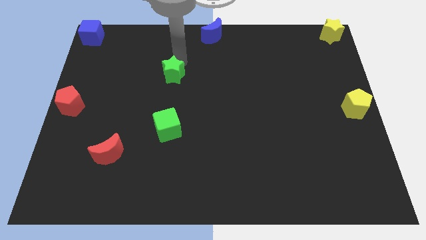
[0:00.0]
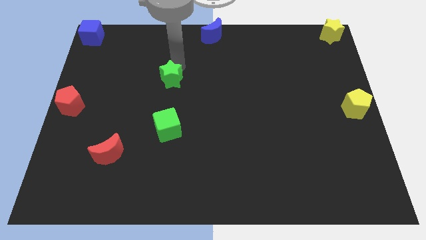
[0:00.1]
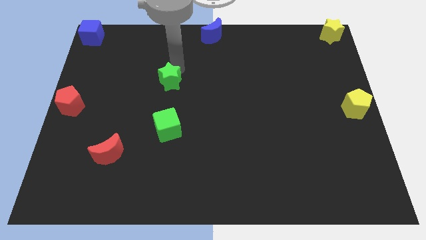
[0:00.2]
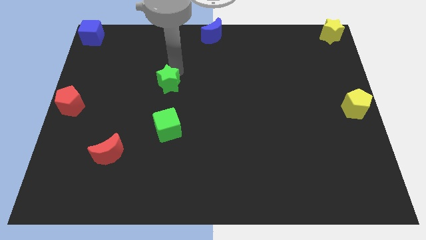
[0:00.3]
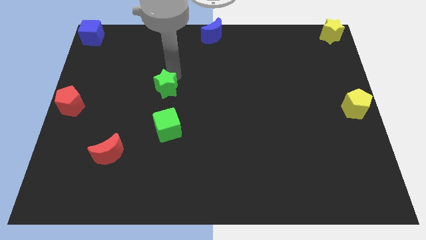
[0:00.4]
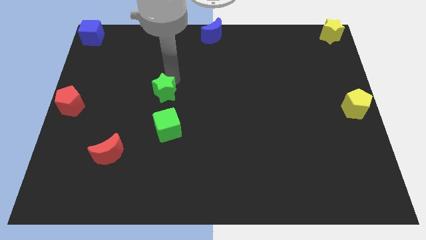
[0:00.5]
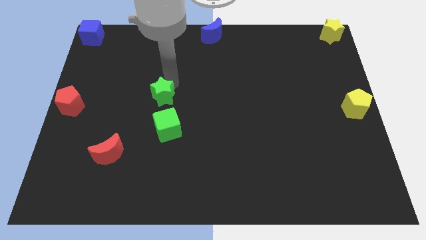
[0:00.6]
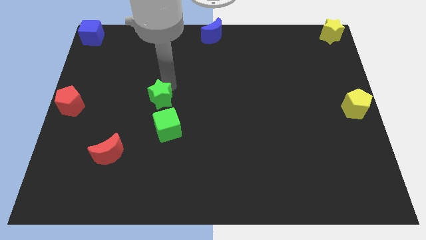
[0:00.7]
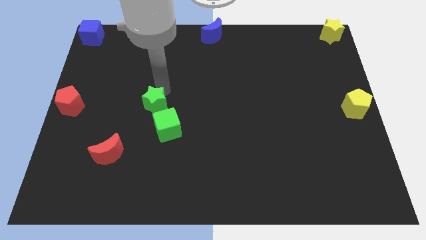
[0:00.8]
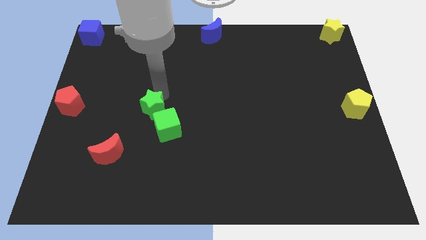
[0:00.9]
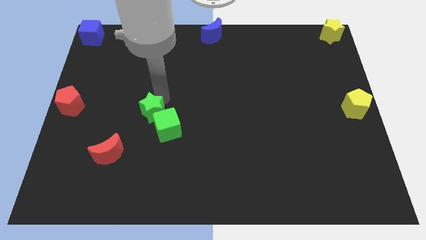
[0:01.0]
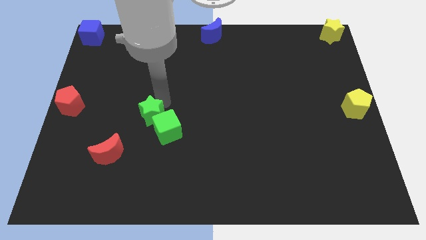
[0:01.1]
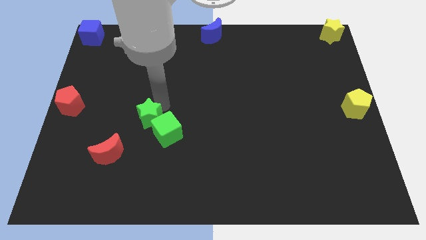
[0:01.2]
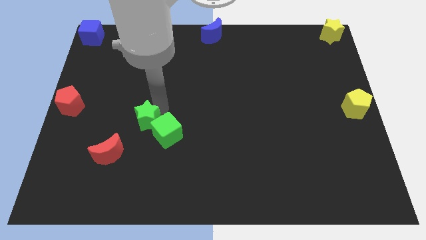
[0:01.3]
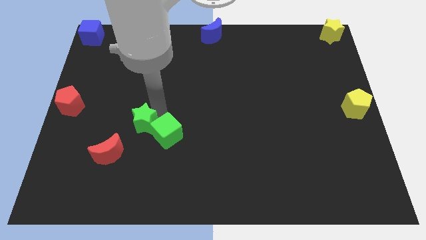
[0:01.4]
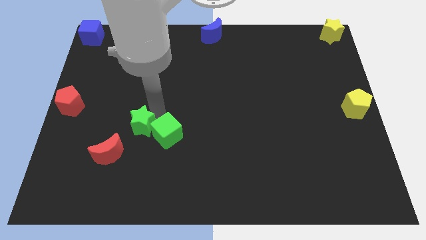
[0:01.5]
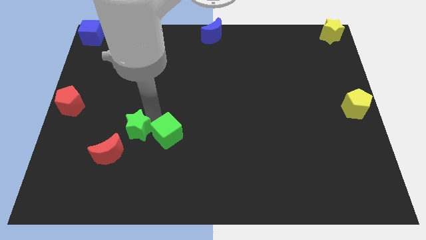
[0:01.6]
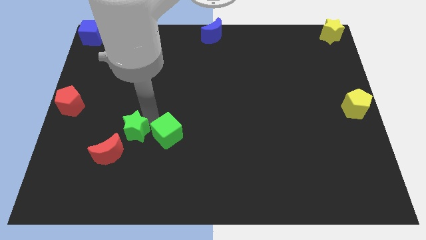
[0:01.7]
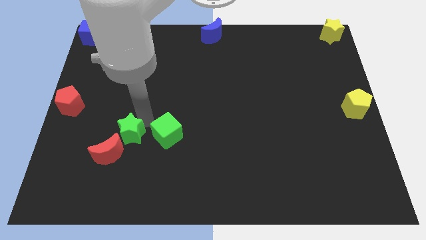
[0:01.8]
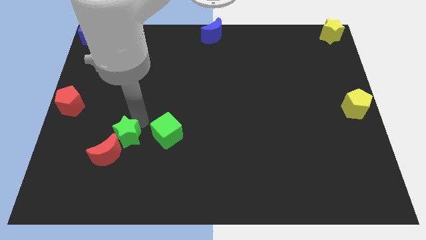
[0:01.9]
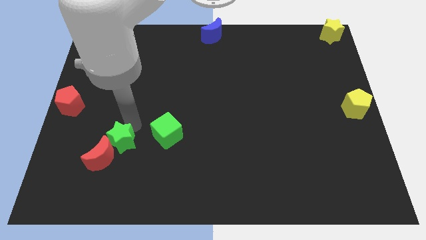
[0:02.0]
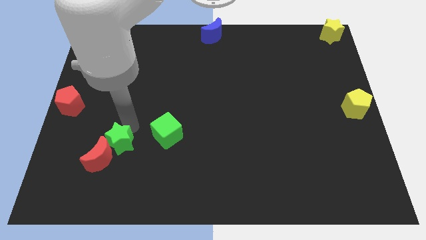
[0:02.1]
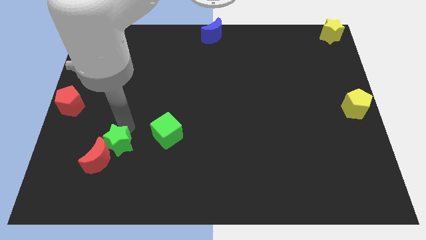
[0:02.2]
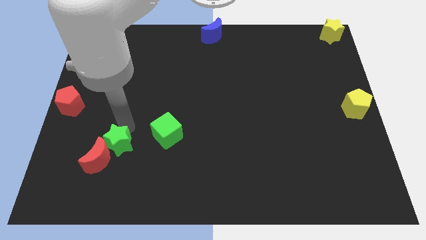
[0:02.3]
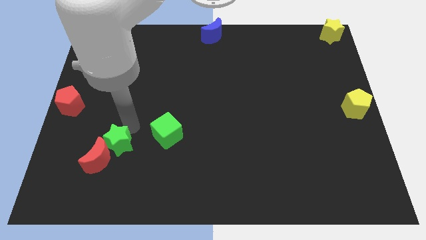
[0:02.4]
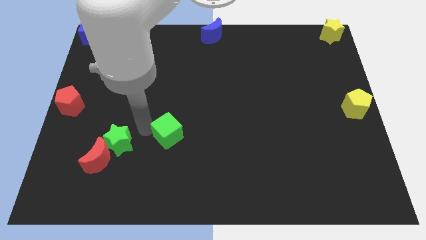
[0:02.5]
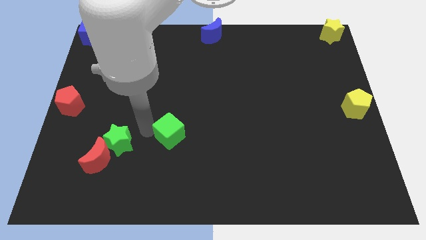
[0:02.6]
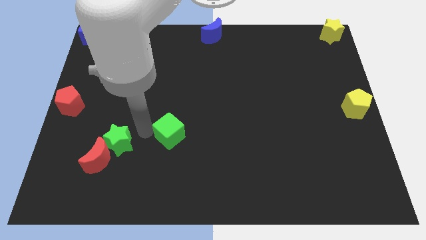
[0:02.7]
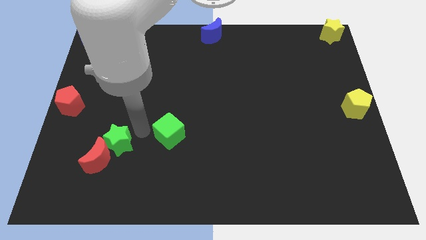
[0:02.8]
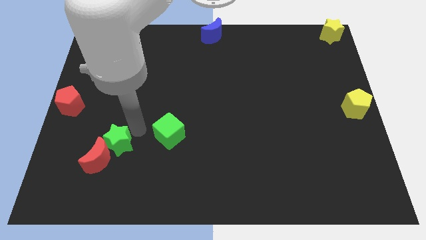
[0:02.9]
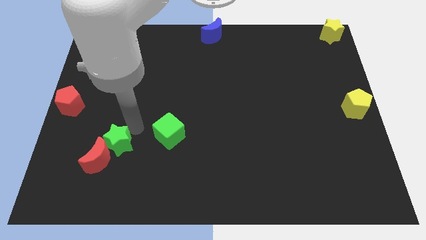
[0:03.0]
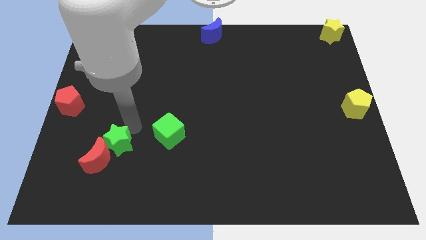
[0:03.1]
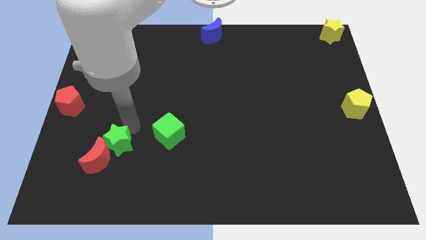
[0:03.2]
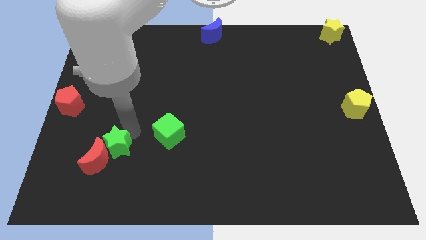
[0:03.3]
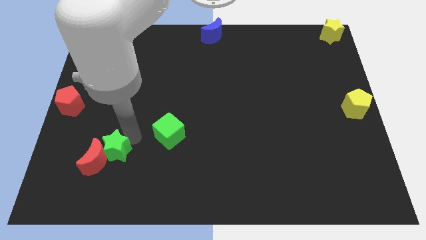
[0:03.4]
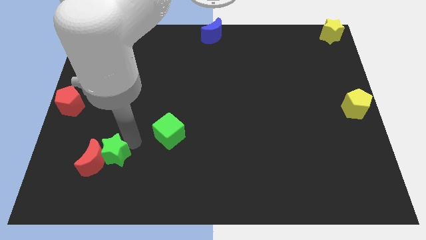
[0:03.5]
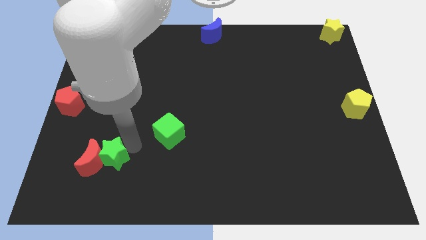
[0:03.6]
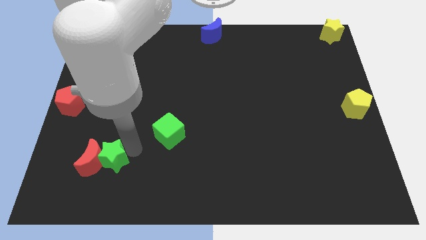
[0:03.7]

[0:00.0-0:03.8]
push the green star into the red moon

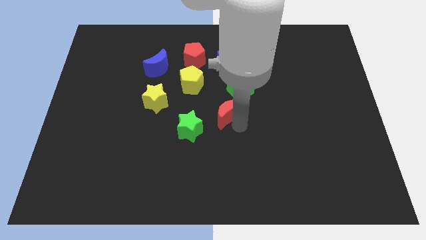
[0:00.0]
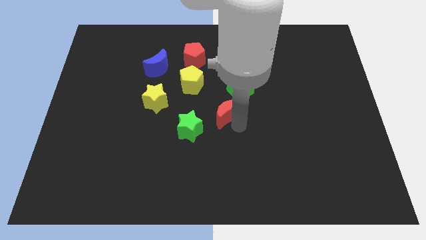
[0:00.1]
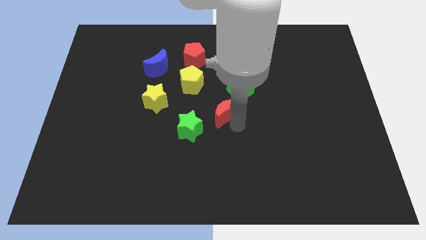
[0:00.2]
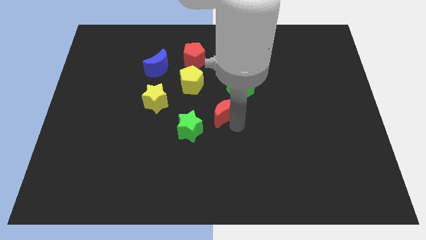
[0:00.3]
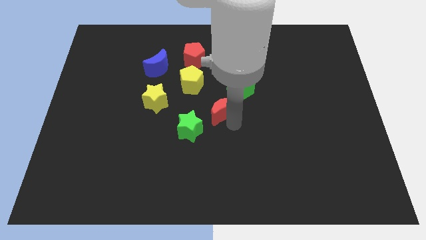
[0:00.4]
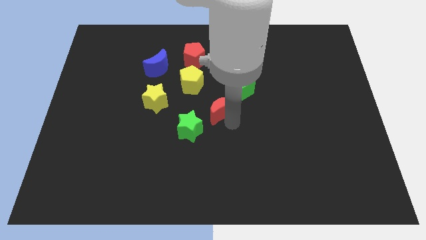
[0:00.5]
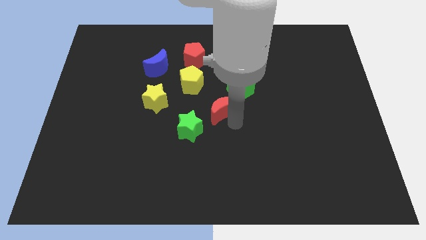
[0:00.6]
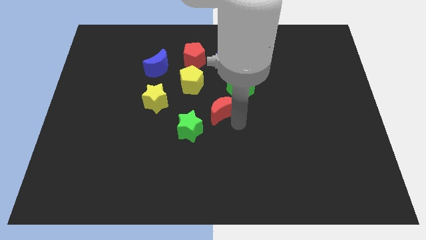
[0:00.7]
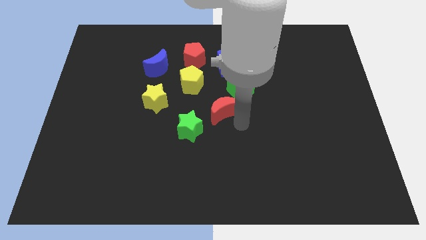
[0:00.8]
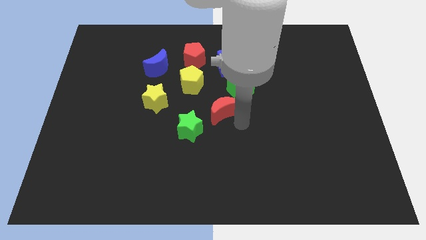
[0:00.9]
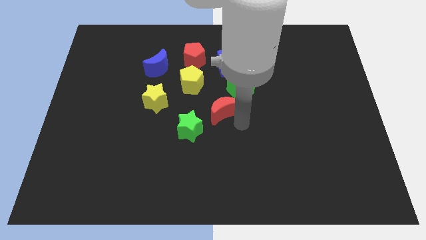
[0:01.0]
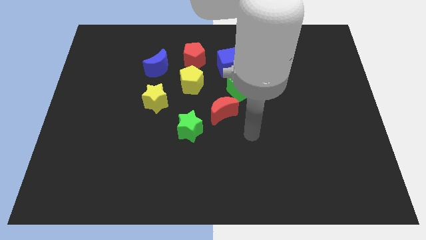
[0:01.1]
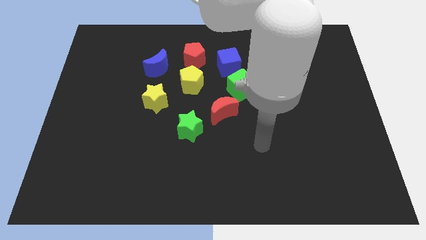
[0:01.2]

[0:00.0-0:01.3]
arrange the red moon in between green star and green cube

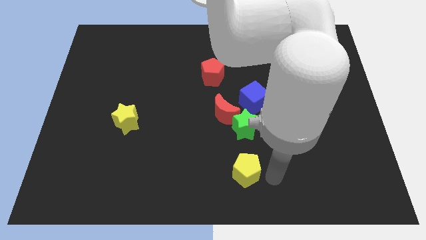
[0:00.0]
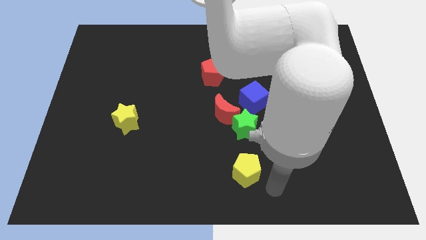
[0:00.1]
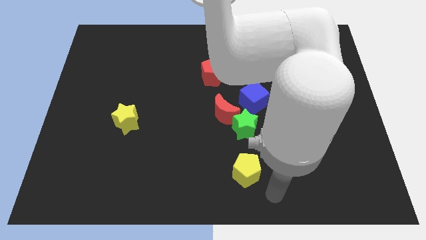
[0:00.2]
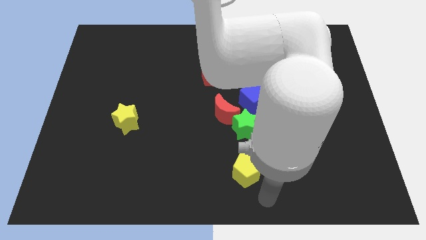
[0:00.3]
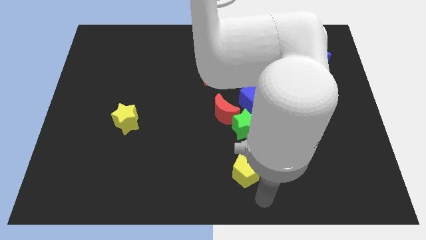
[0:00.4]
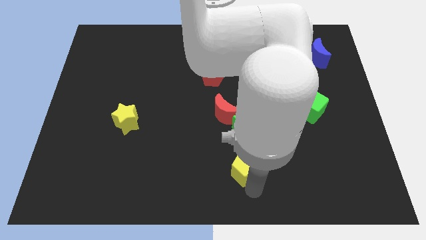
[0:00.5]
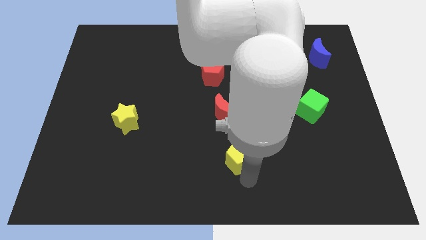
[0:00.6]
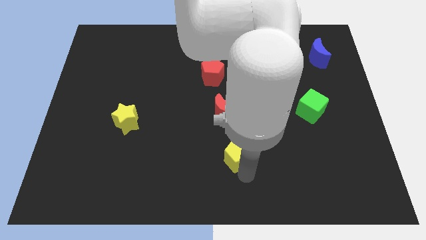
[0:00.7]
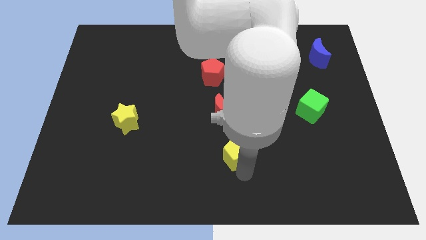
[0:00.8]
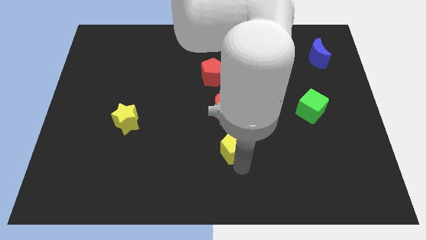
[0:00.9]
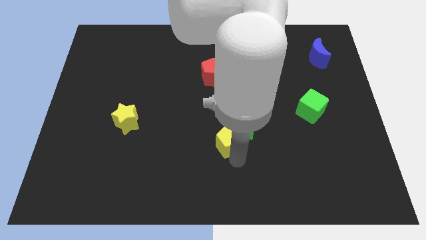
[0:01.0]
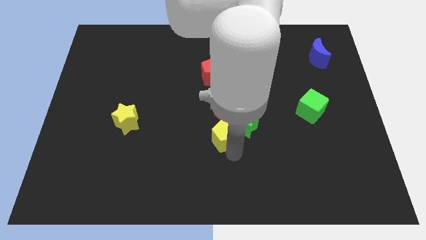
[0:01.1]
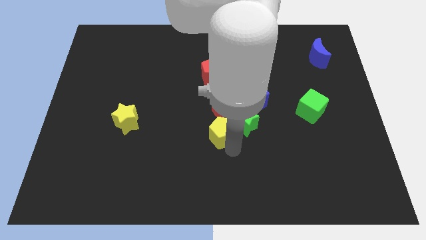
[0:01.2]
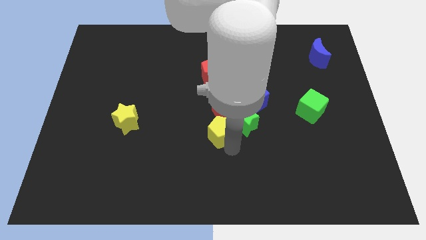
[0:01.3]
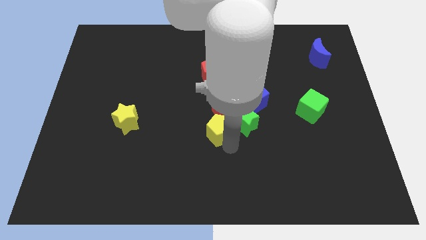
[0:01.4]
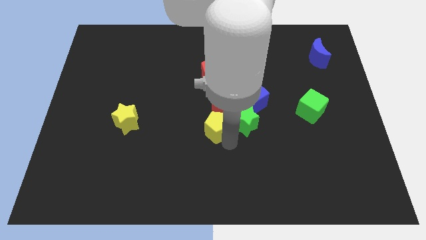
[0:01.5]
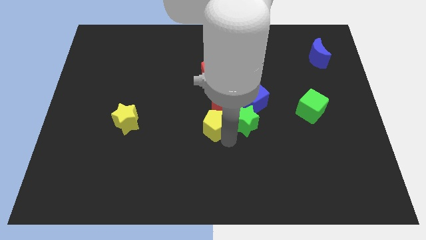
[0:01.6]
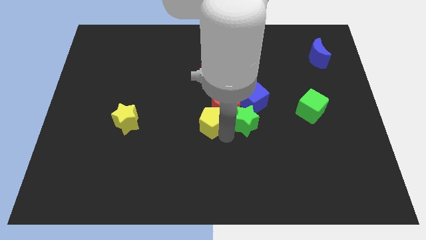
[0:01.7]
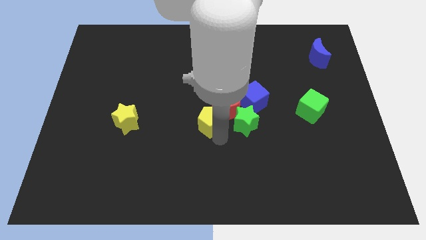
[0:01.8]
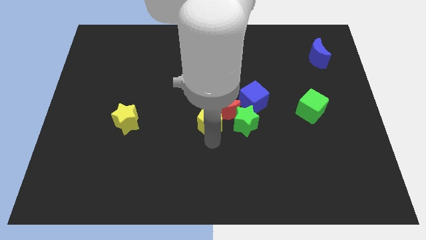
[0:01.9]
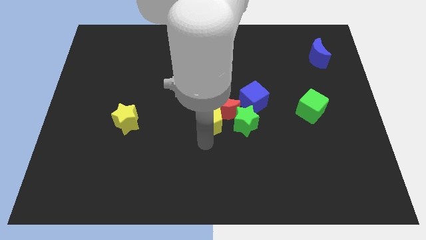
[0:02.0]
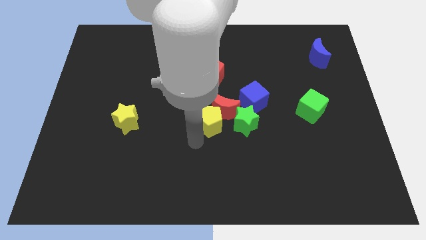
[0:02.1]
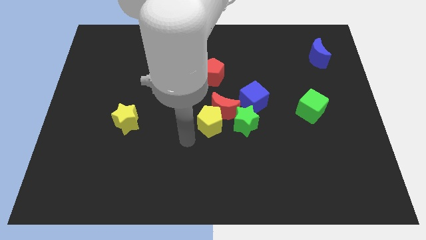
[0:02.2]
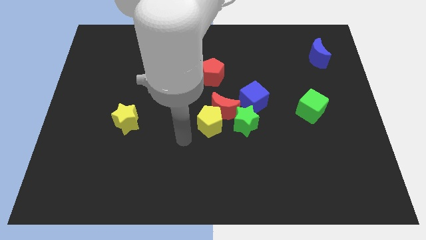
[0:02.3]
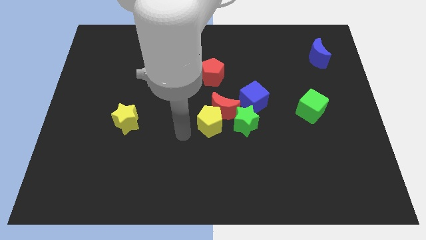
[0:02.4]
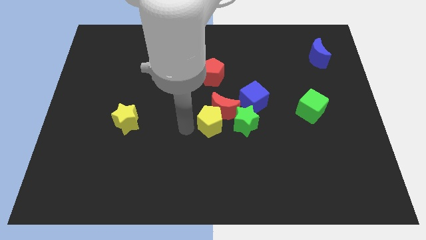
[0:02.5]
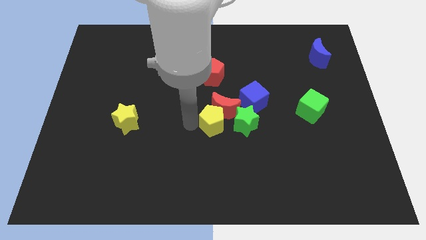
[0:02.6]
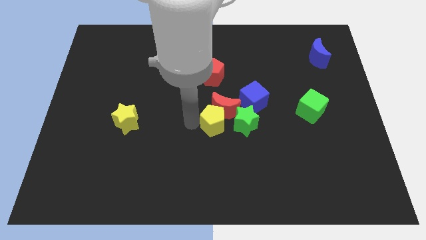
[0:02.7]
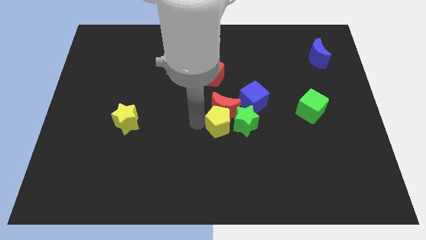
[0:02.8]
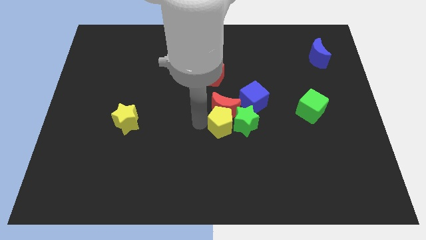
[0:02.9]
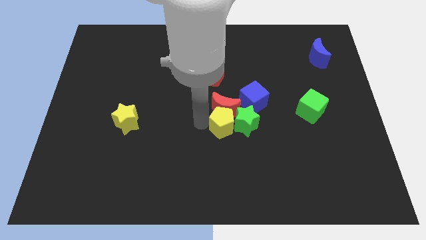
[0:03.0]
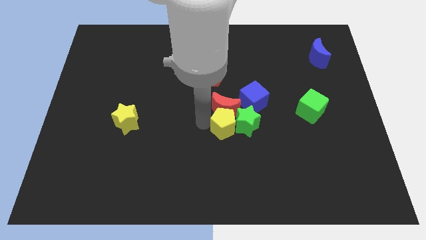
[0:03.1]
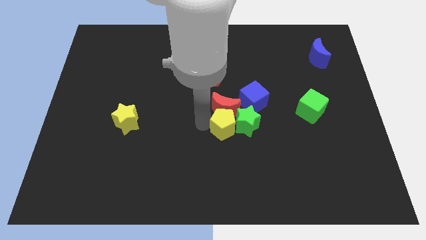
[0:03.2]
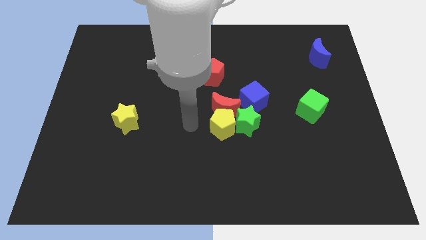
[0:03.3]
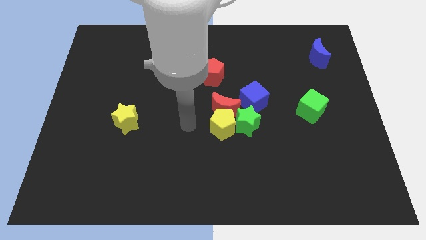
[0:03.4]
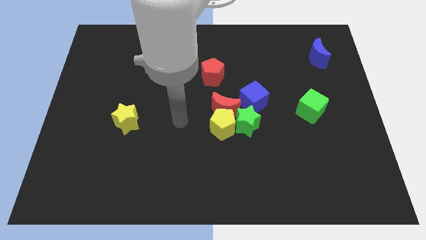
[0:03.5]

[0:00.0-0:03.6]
push the yellow pentagon to the bottom of the red crescent

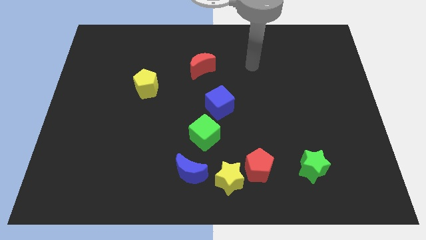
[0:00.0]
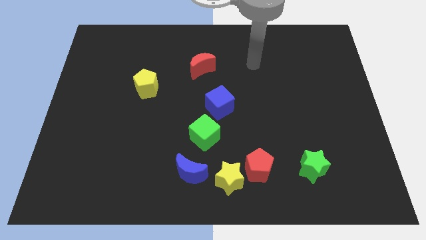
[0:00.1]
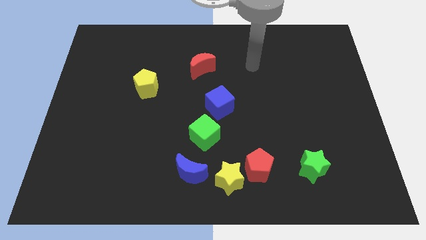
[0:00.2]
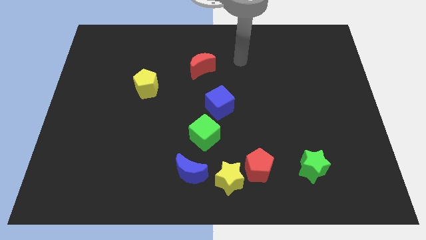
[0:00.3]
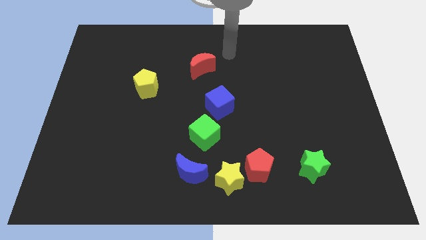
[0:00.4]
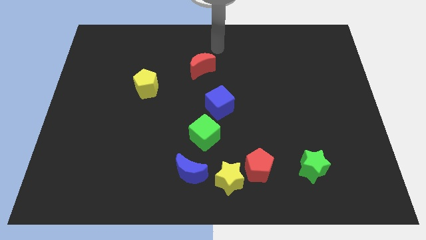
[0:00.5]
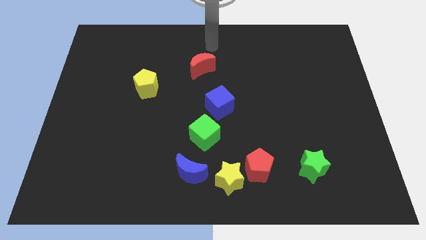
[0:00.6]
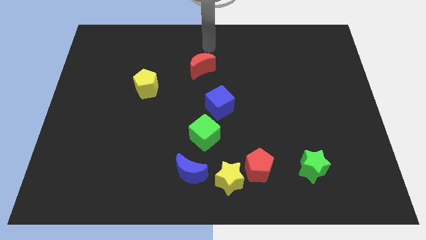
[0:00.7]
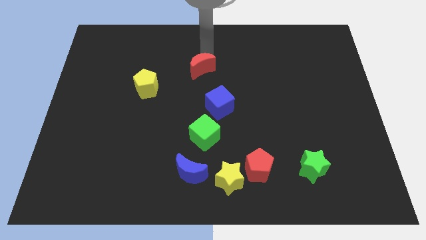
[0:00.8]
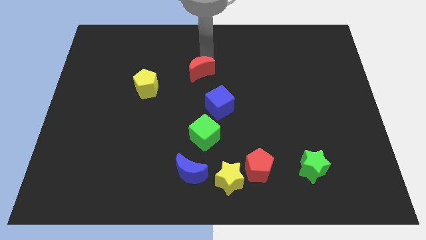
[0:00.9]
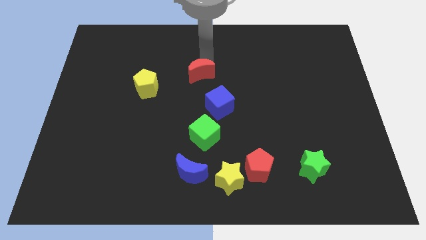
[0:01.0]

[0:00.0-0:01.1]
push the red moon slightly
